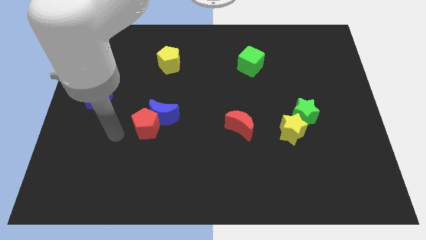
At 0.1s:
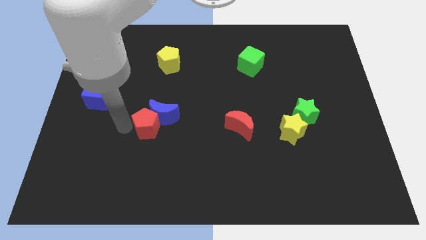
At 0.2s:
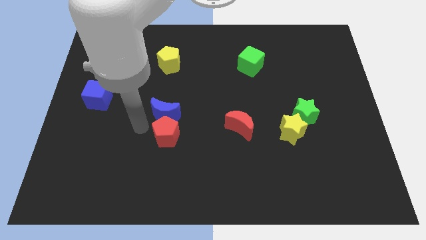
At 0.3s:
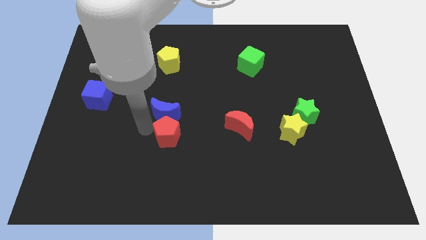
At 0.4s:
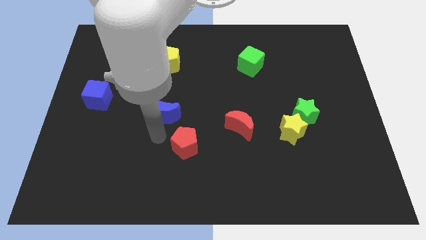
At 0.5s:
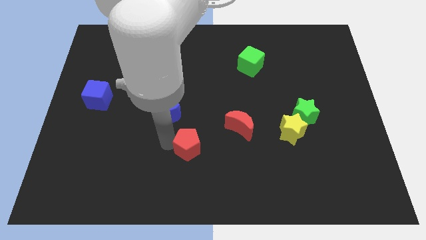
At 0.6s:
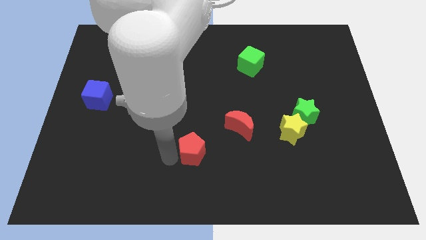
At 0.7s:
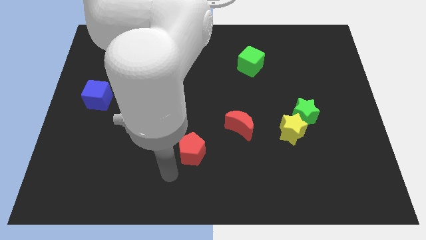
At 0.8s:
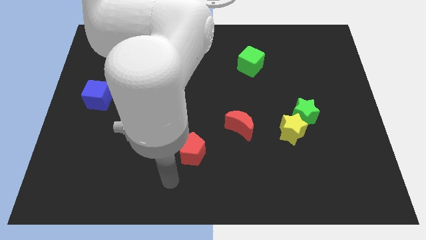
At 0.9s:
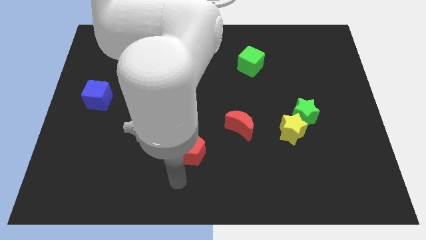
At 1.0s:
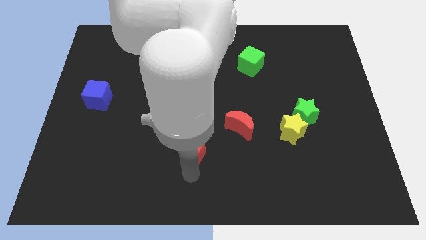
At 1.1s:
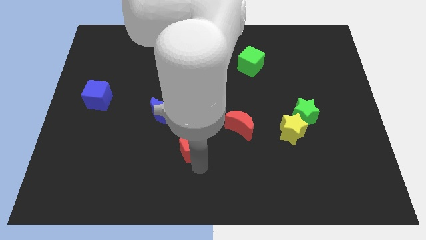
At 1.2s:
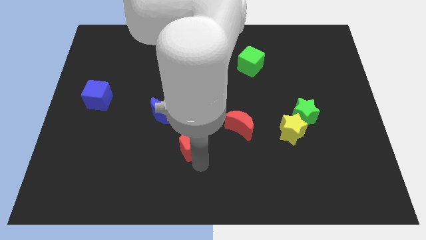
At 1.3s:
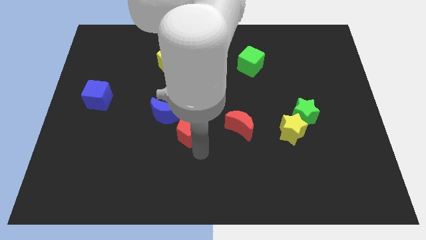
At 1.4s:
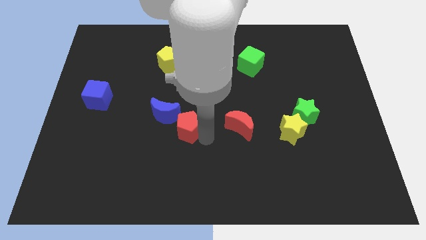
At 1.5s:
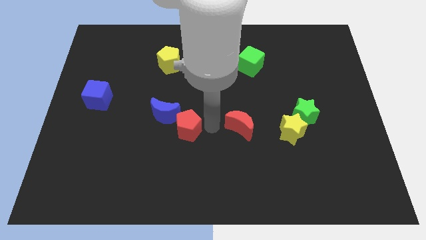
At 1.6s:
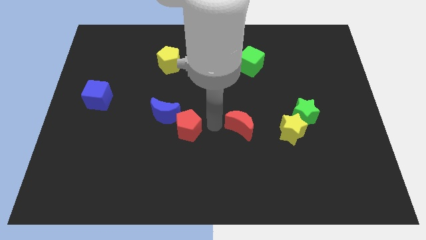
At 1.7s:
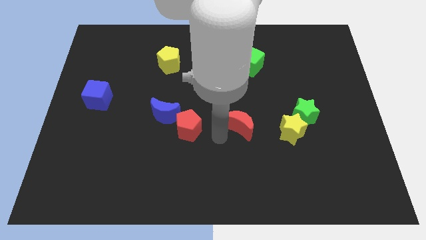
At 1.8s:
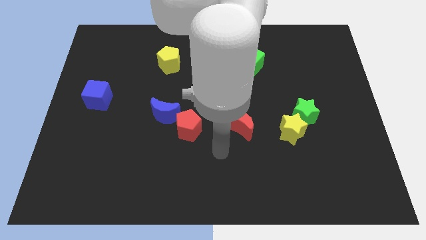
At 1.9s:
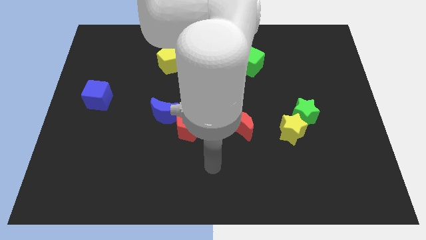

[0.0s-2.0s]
slightly push red pentagon towards the blue crescent

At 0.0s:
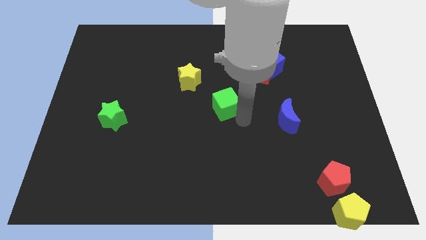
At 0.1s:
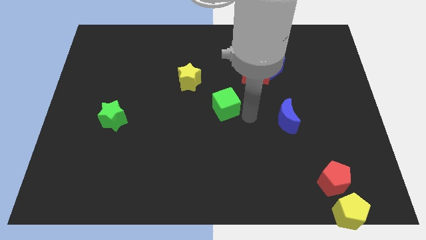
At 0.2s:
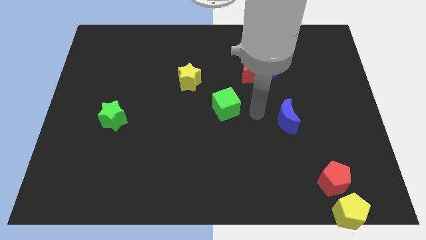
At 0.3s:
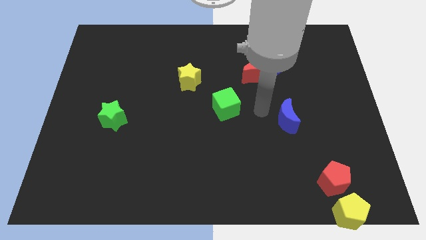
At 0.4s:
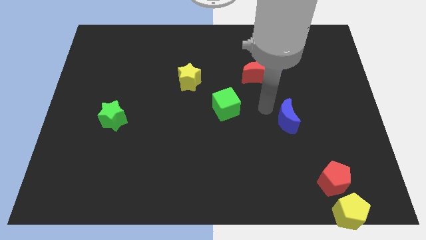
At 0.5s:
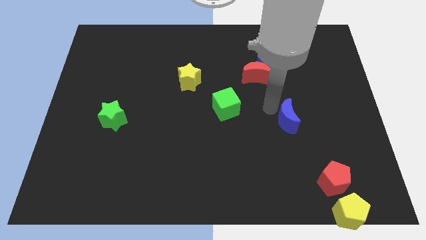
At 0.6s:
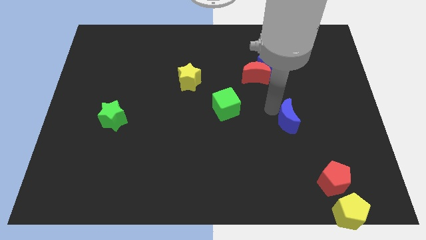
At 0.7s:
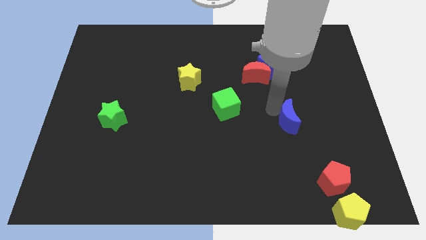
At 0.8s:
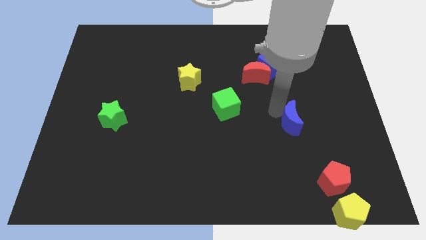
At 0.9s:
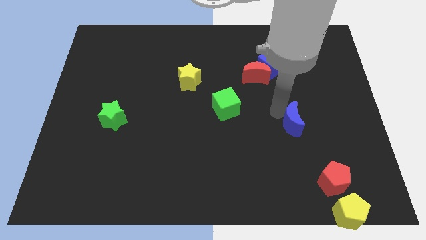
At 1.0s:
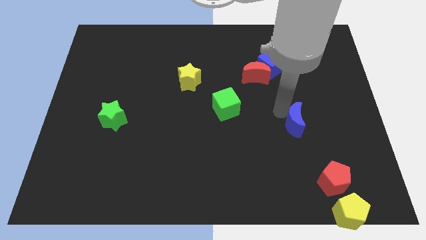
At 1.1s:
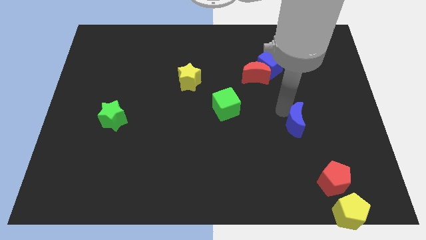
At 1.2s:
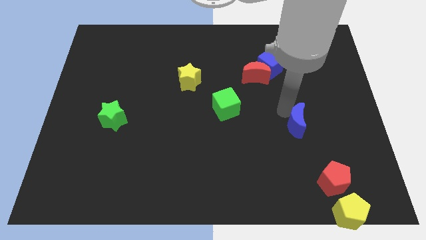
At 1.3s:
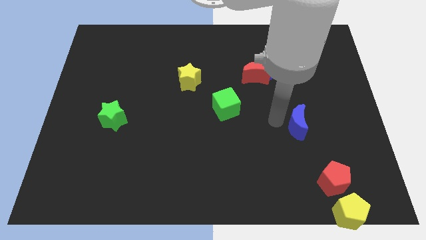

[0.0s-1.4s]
move the blue moon slightly to the right

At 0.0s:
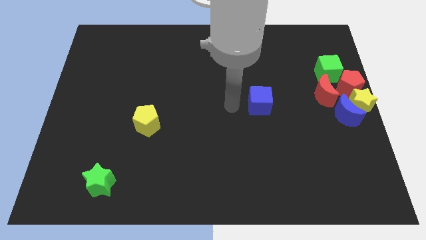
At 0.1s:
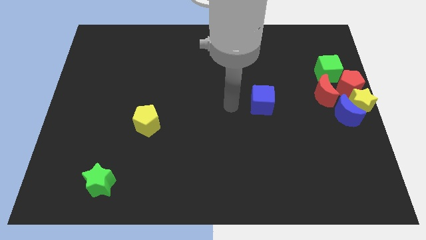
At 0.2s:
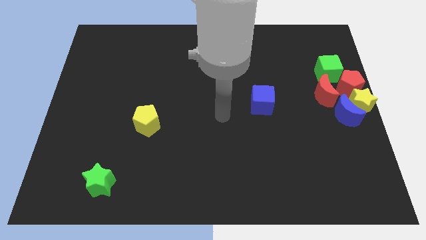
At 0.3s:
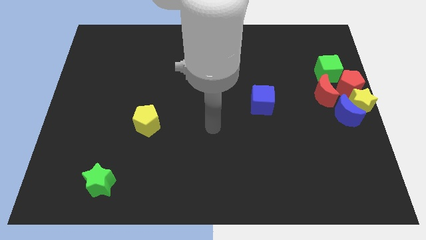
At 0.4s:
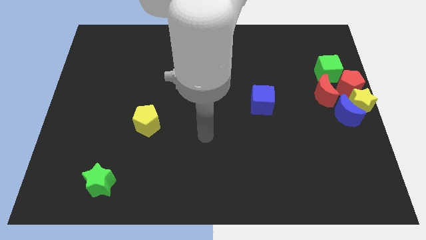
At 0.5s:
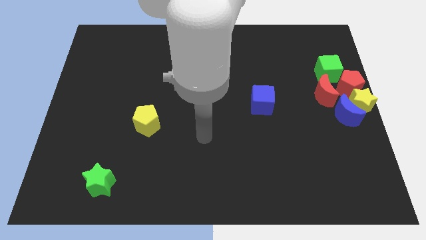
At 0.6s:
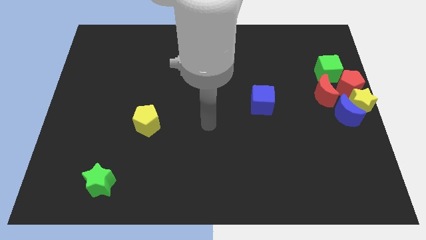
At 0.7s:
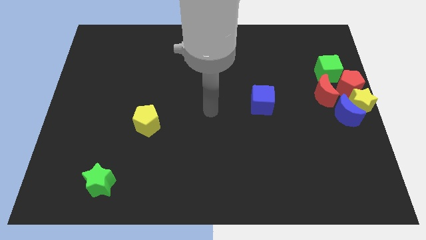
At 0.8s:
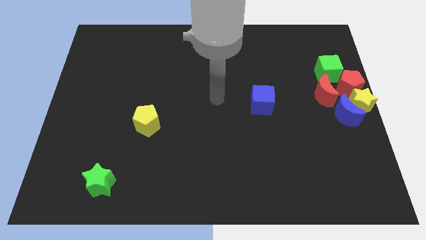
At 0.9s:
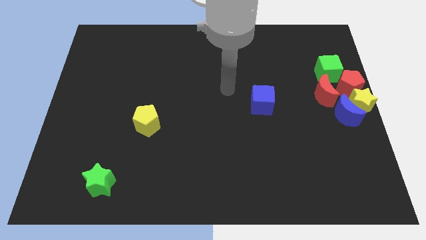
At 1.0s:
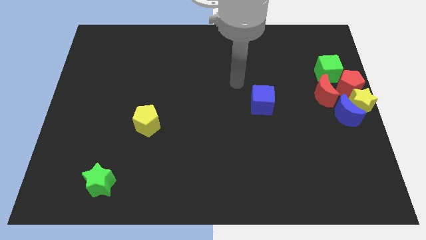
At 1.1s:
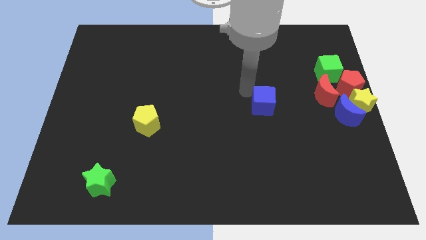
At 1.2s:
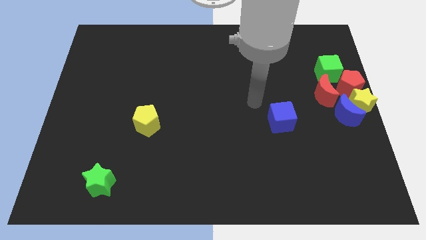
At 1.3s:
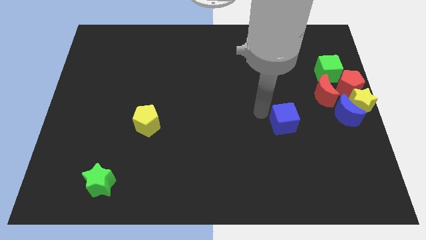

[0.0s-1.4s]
move blue cube slightly right

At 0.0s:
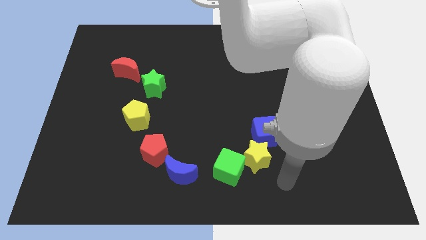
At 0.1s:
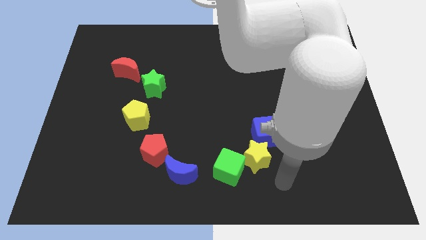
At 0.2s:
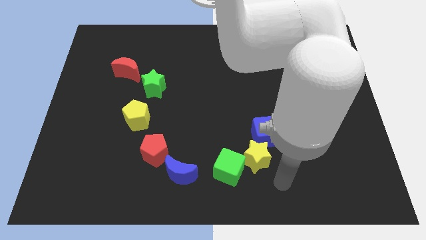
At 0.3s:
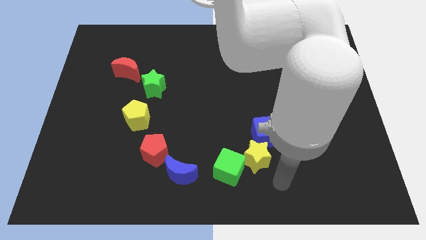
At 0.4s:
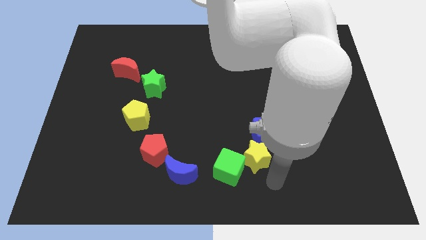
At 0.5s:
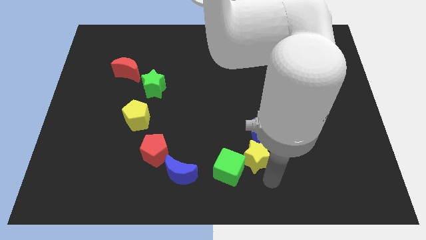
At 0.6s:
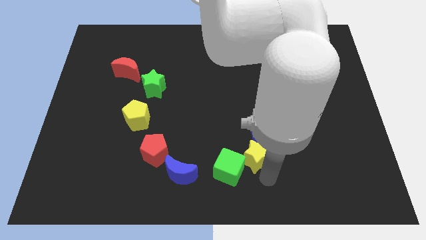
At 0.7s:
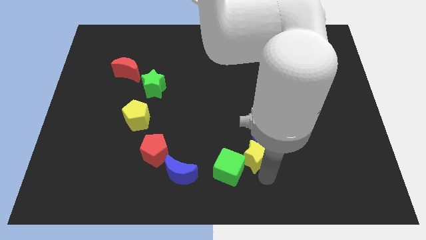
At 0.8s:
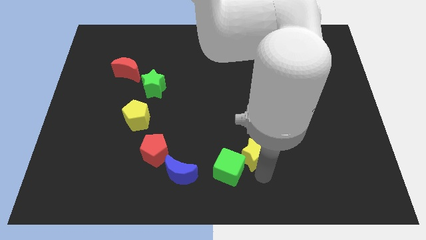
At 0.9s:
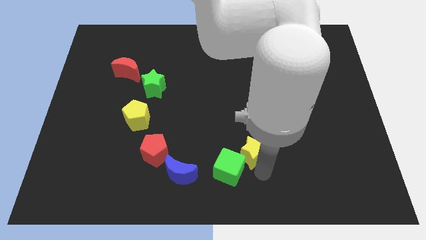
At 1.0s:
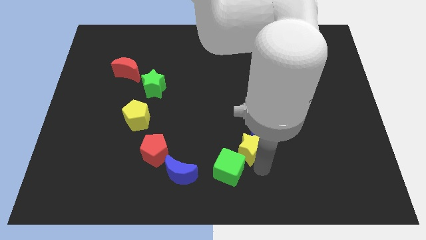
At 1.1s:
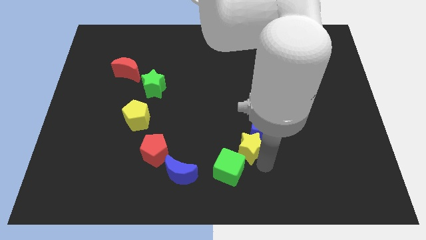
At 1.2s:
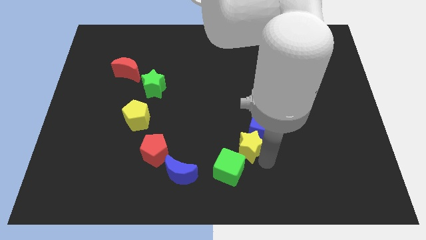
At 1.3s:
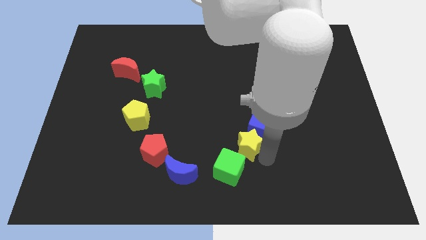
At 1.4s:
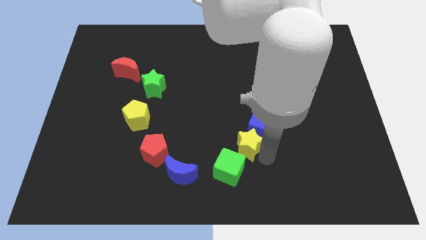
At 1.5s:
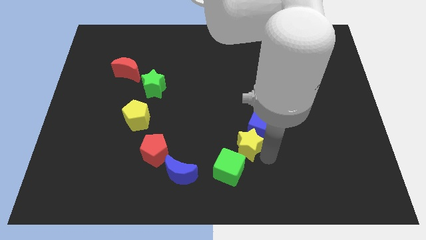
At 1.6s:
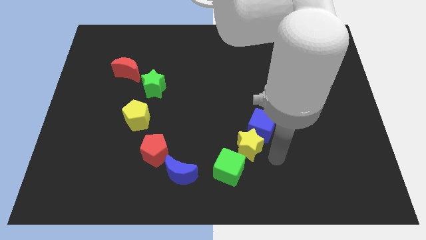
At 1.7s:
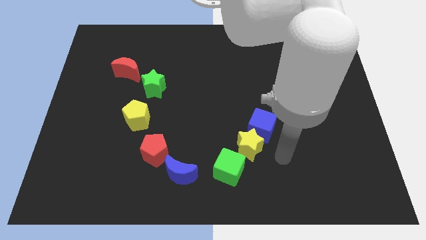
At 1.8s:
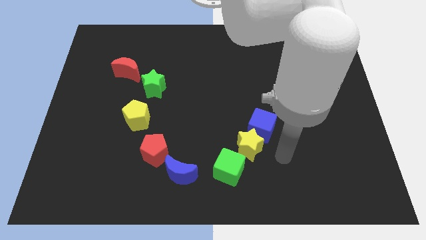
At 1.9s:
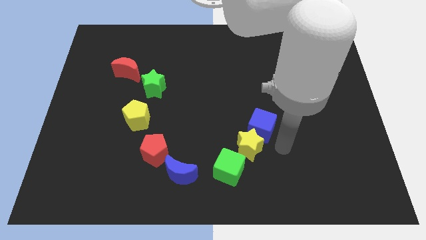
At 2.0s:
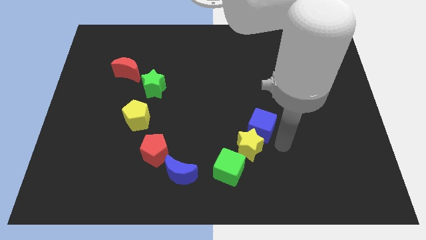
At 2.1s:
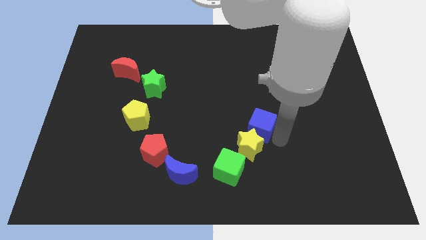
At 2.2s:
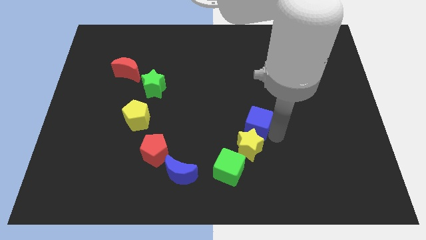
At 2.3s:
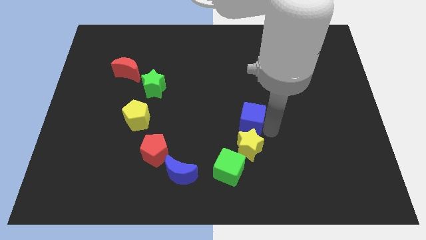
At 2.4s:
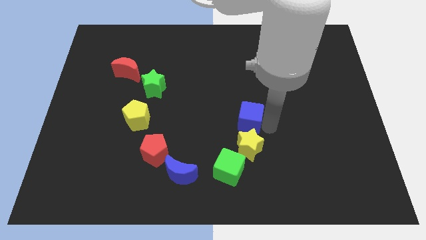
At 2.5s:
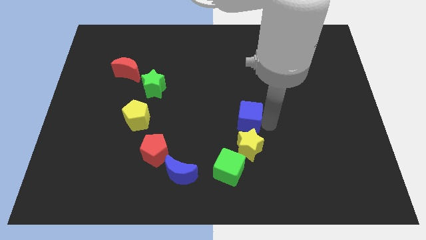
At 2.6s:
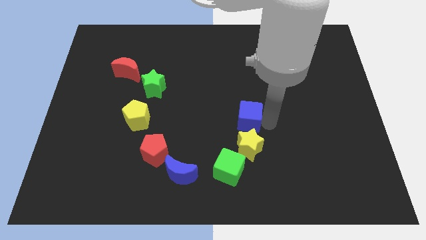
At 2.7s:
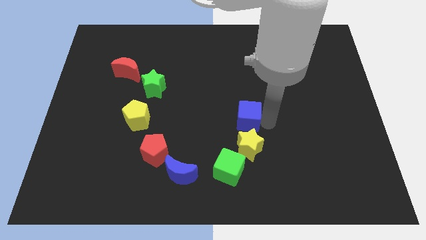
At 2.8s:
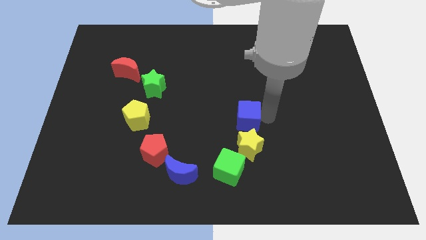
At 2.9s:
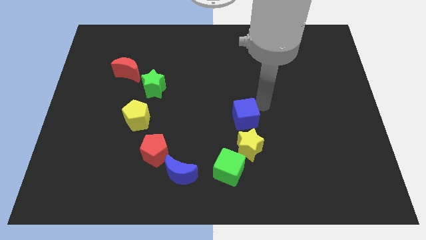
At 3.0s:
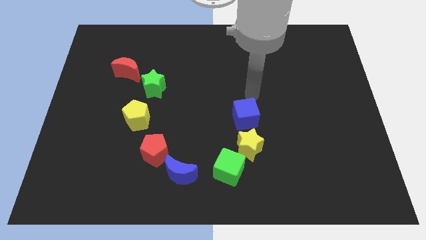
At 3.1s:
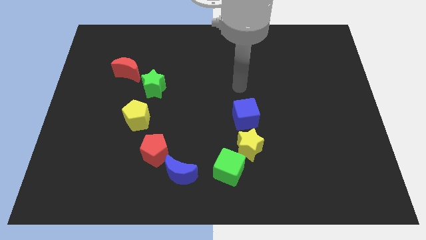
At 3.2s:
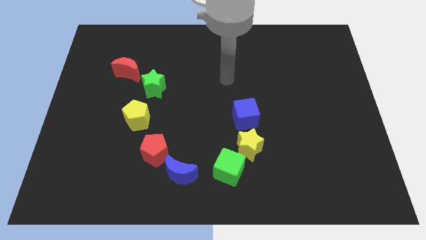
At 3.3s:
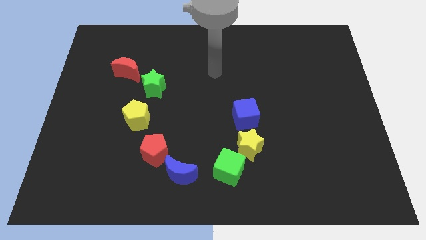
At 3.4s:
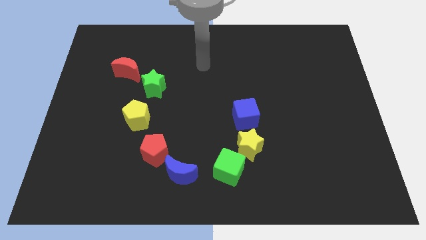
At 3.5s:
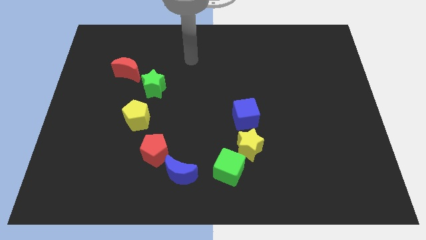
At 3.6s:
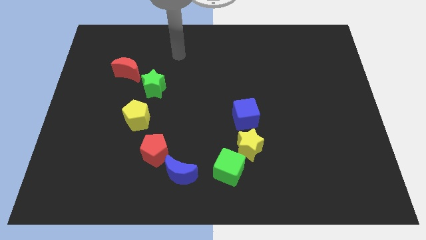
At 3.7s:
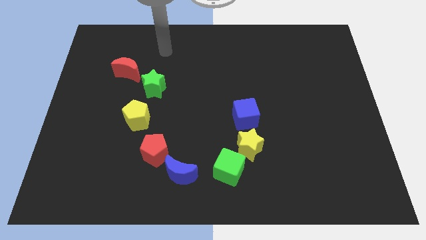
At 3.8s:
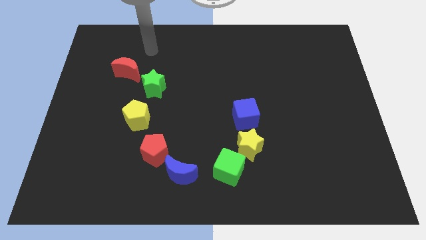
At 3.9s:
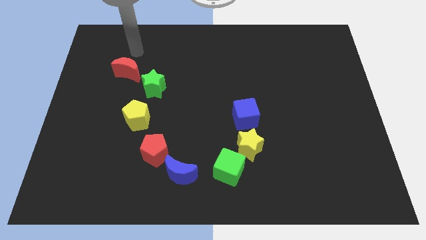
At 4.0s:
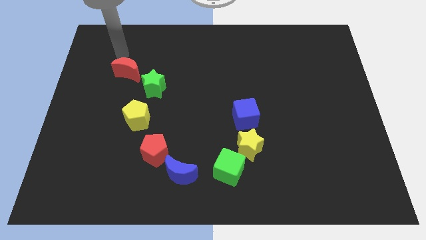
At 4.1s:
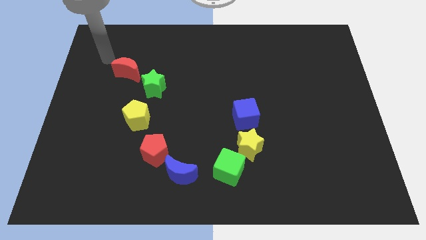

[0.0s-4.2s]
move your arm again to the red moon
